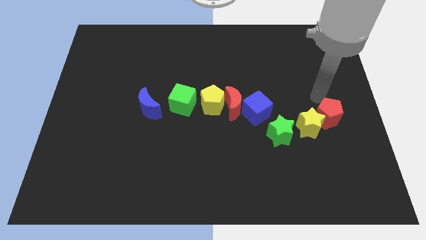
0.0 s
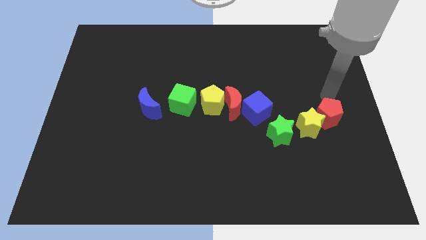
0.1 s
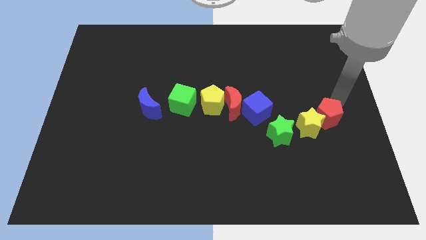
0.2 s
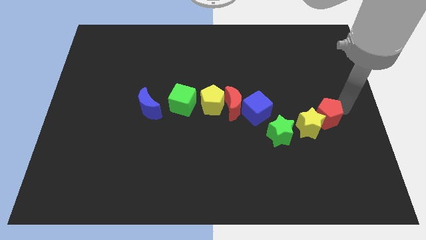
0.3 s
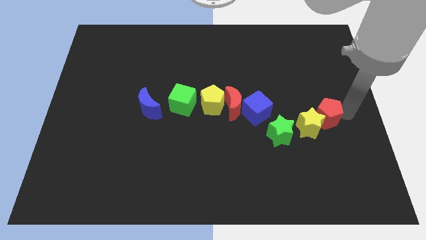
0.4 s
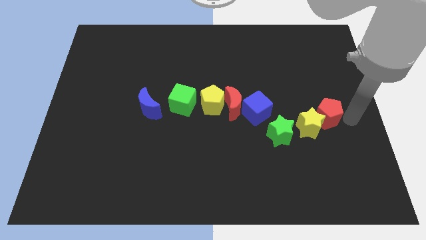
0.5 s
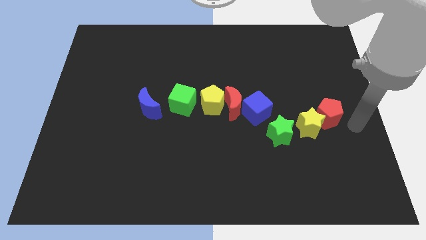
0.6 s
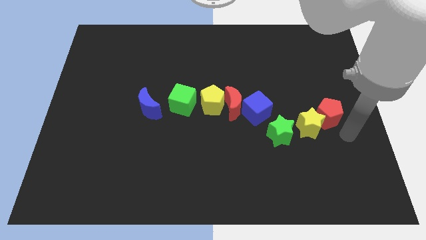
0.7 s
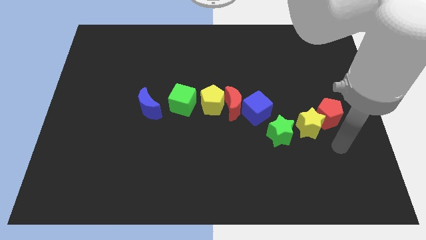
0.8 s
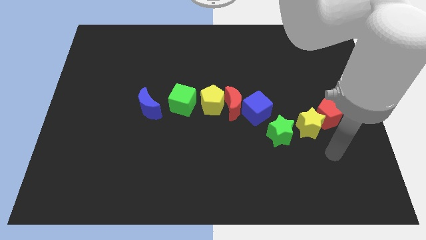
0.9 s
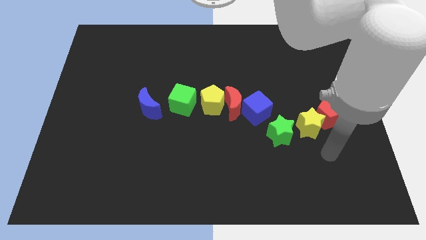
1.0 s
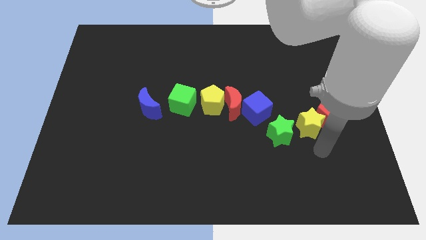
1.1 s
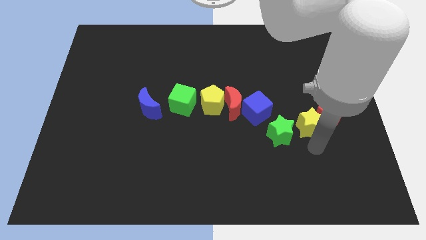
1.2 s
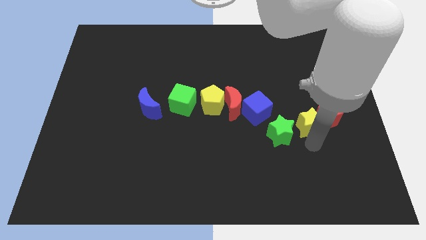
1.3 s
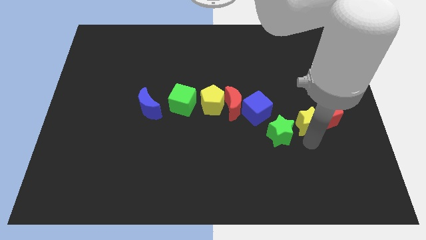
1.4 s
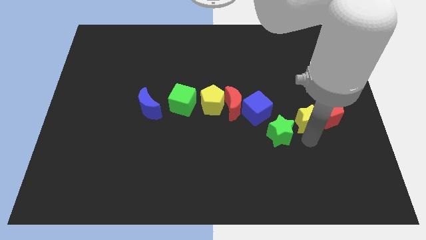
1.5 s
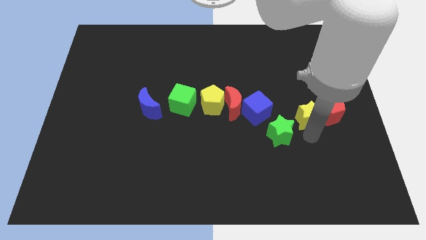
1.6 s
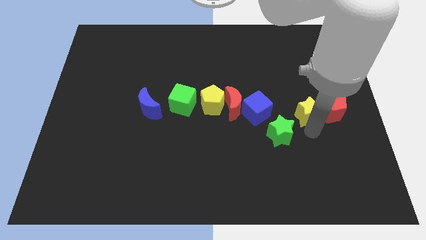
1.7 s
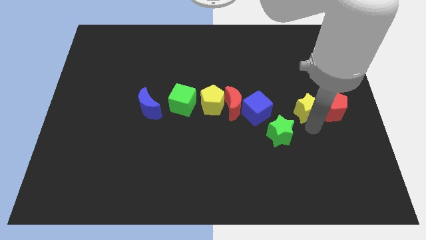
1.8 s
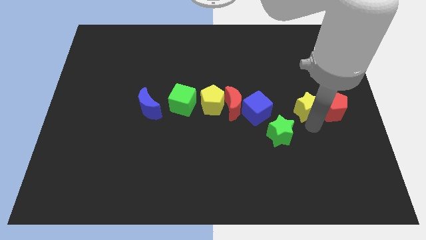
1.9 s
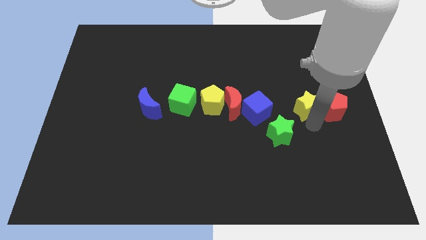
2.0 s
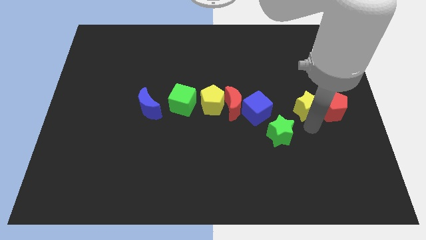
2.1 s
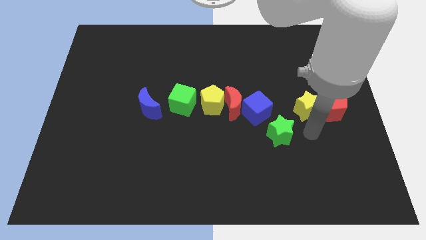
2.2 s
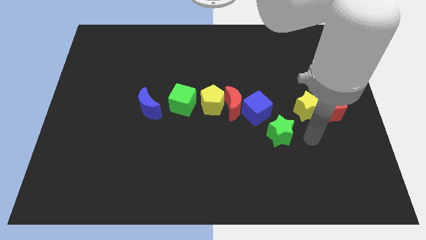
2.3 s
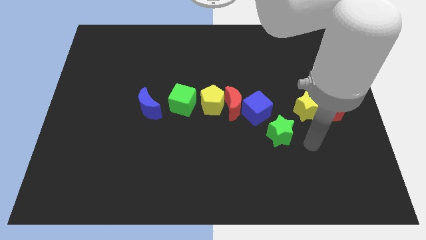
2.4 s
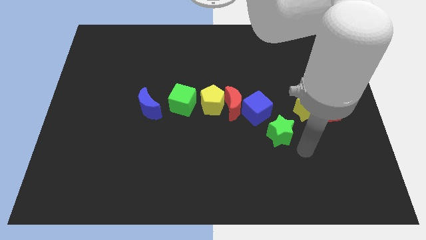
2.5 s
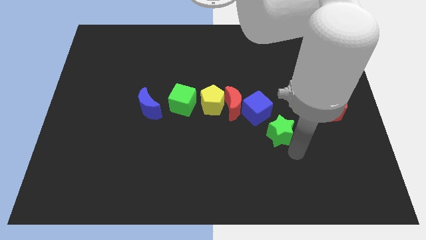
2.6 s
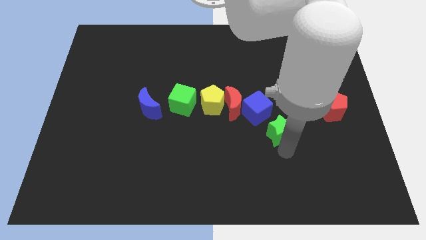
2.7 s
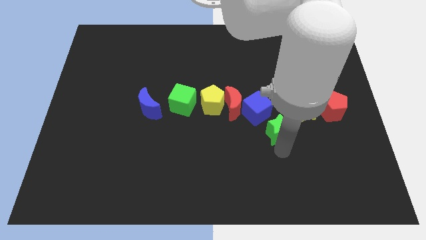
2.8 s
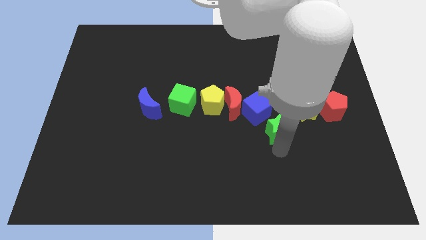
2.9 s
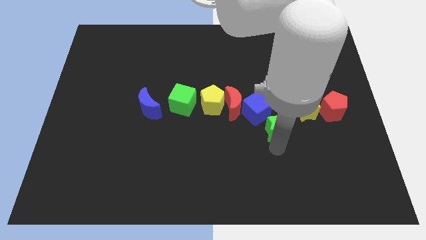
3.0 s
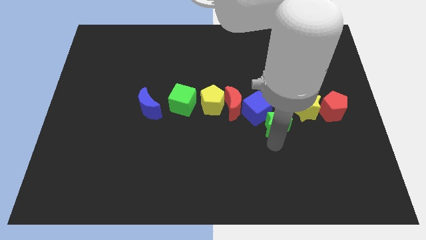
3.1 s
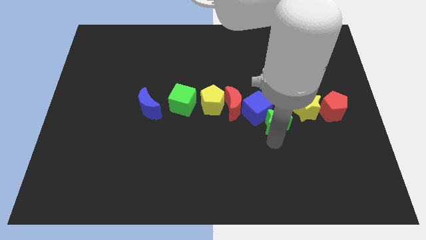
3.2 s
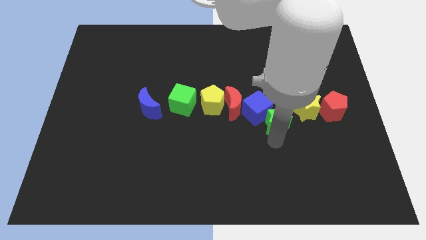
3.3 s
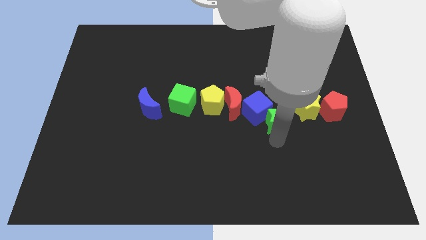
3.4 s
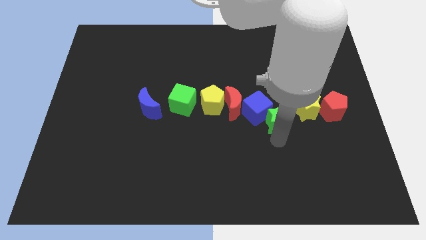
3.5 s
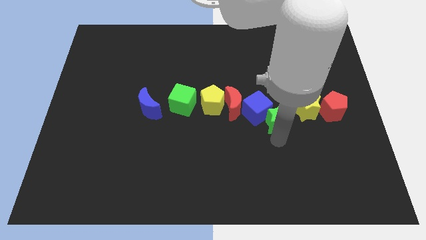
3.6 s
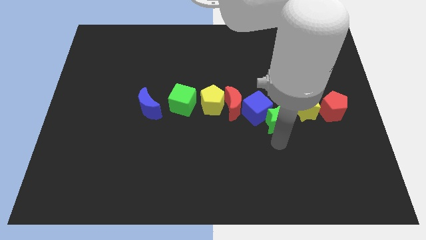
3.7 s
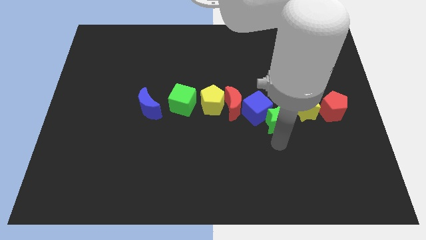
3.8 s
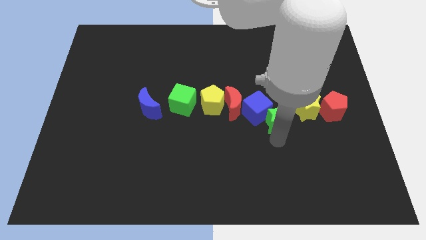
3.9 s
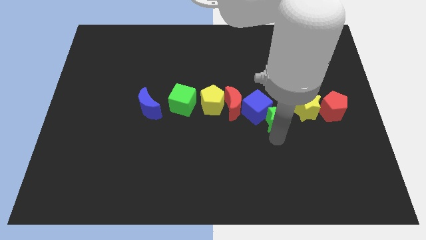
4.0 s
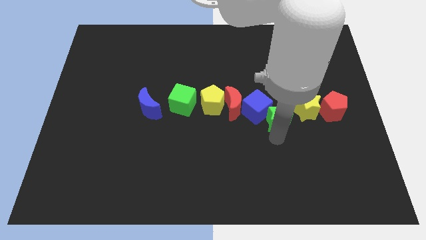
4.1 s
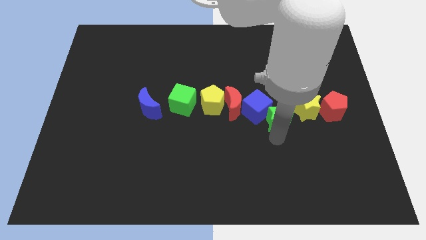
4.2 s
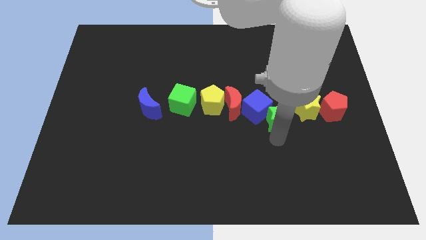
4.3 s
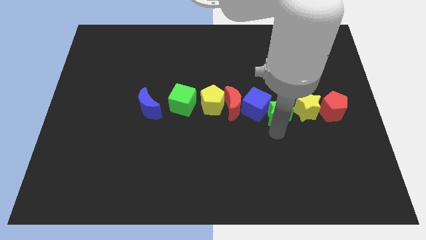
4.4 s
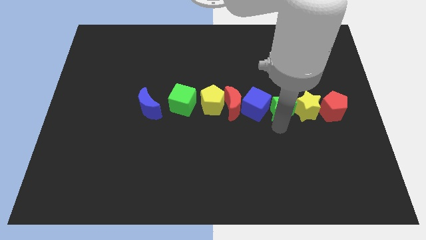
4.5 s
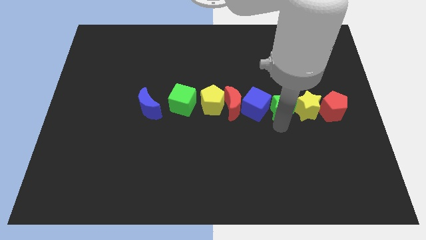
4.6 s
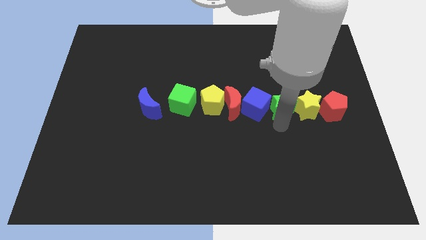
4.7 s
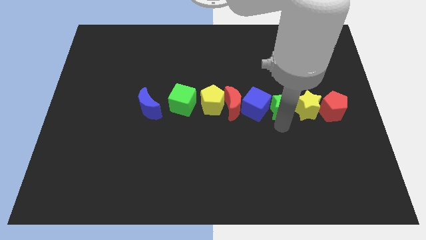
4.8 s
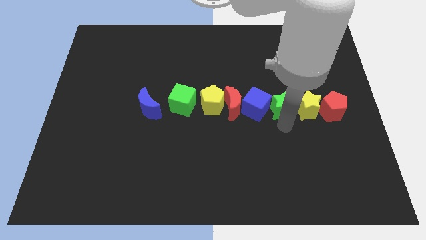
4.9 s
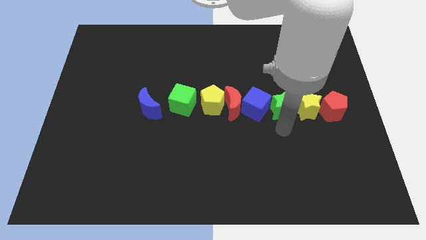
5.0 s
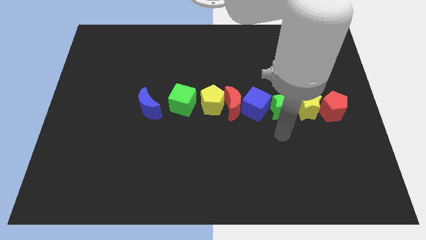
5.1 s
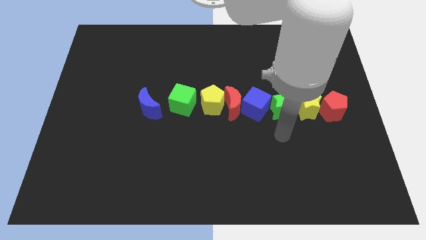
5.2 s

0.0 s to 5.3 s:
move the green star between the yellow star and blue cube

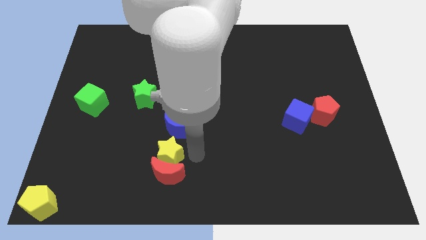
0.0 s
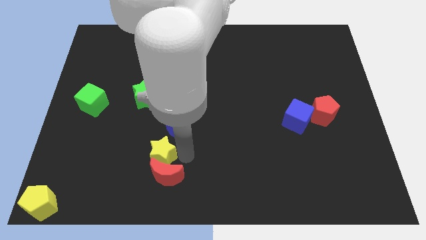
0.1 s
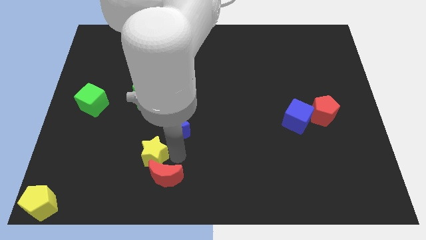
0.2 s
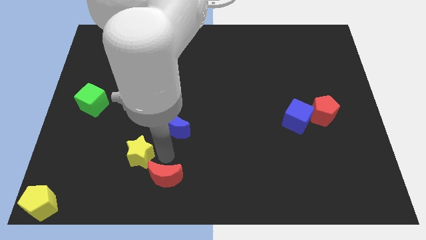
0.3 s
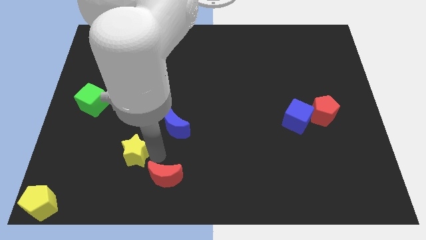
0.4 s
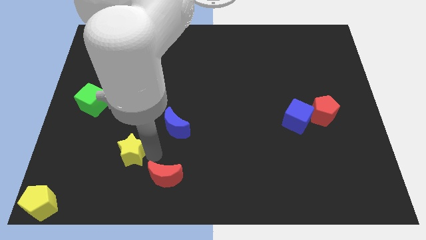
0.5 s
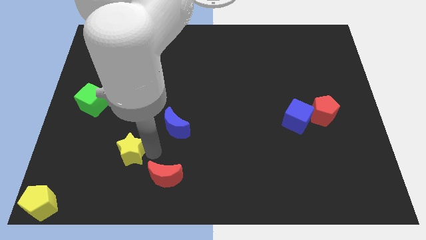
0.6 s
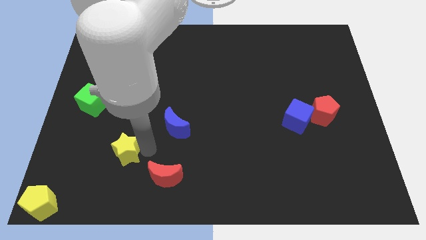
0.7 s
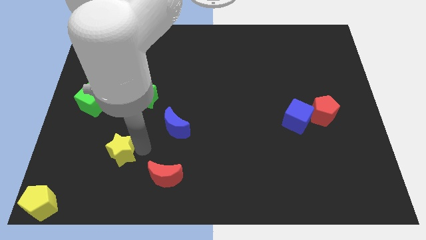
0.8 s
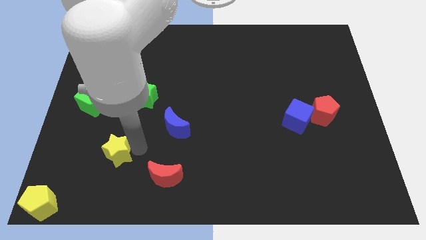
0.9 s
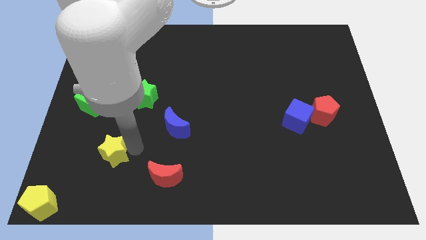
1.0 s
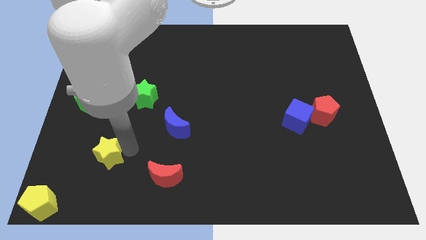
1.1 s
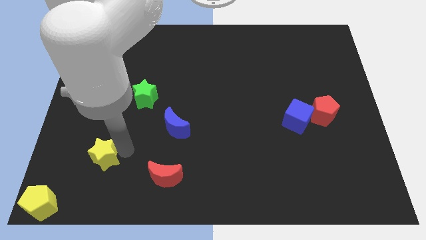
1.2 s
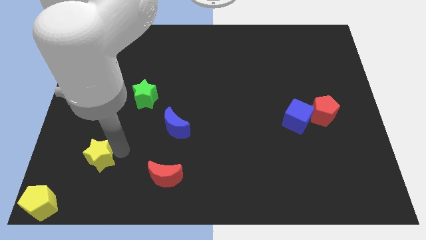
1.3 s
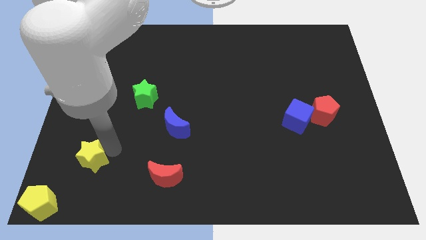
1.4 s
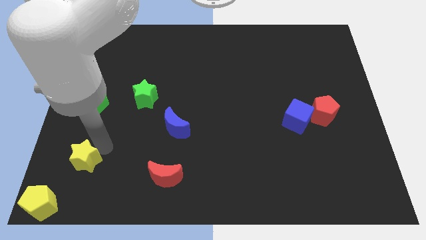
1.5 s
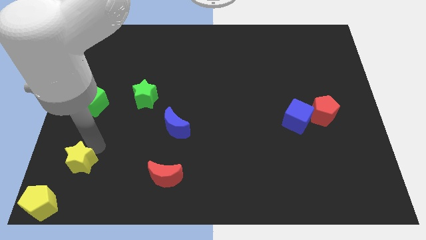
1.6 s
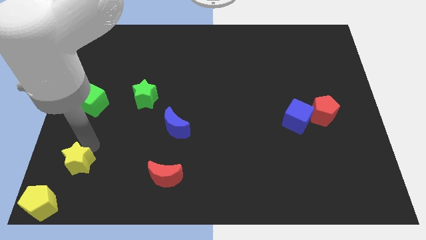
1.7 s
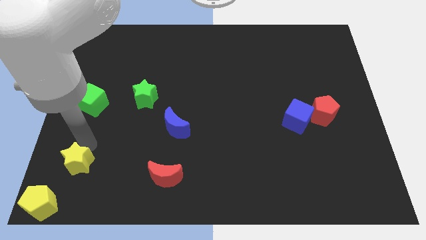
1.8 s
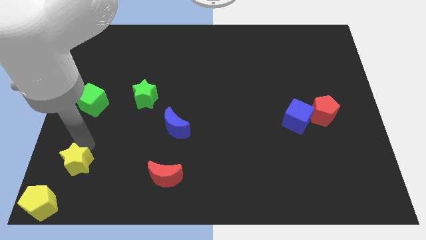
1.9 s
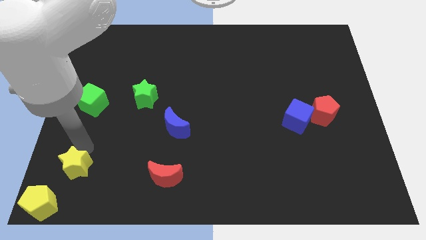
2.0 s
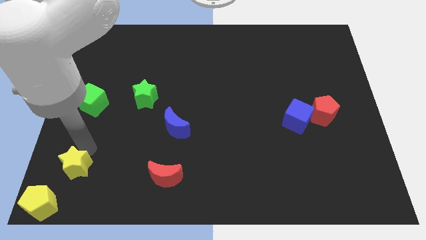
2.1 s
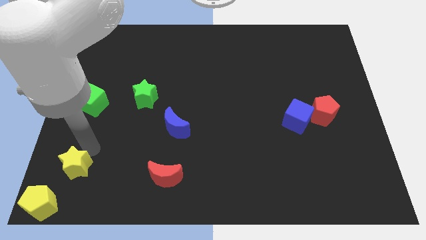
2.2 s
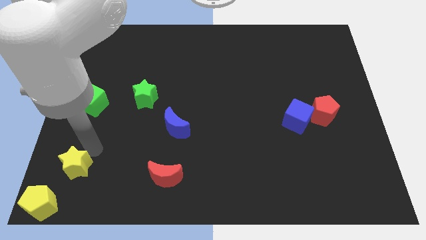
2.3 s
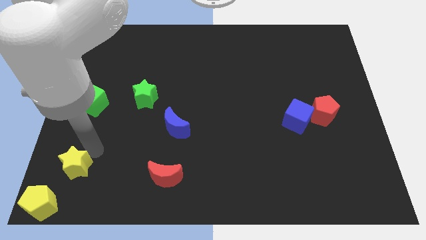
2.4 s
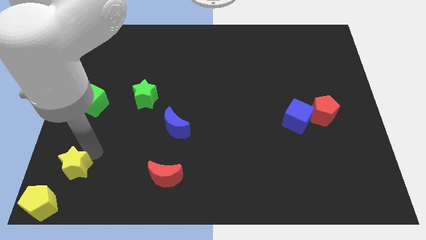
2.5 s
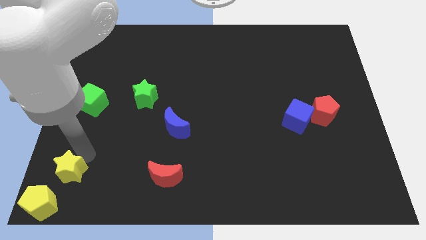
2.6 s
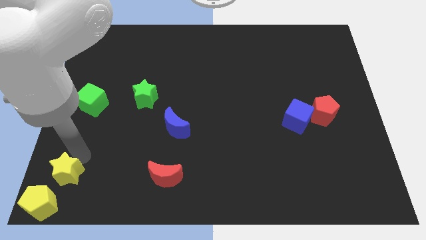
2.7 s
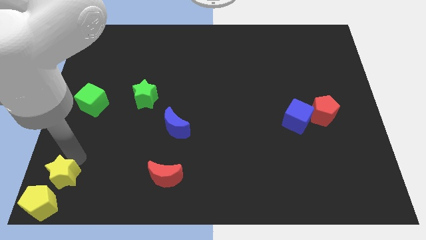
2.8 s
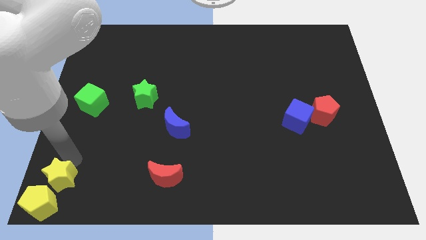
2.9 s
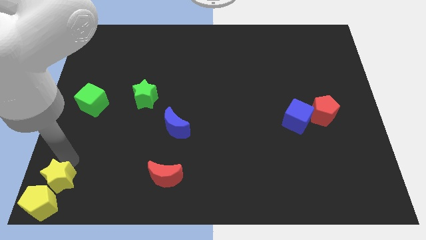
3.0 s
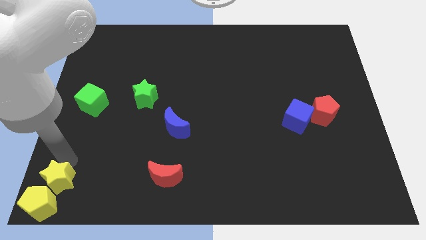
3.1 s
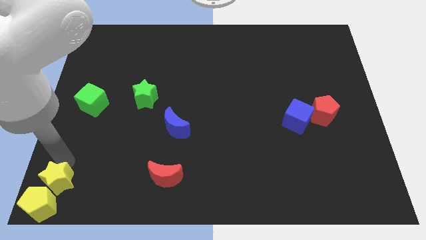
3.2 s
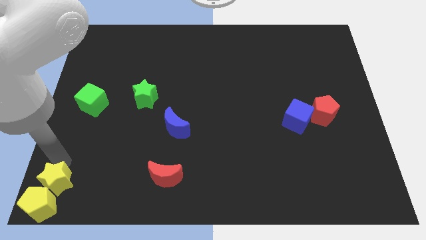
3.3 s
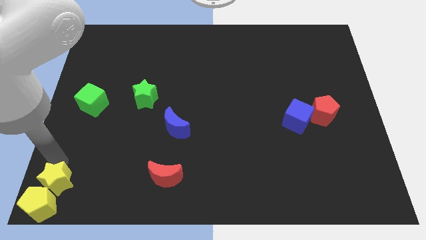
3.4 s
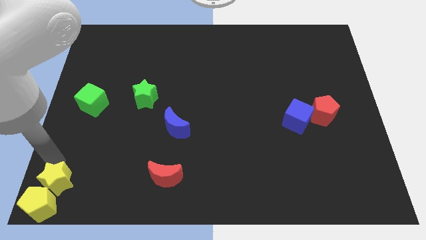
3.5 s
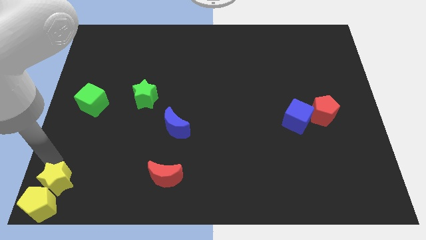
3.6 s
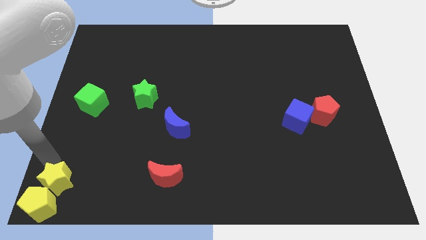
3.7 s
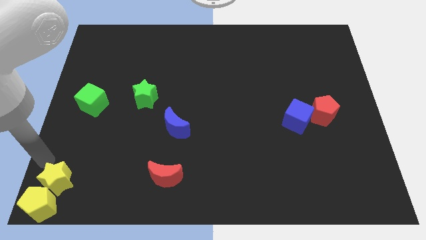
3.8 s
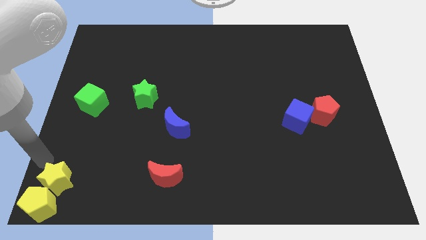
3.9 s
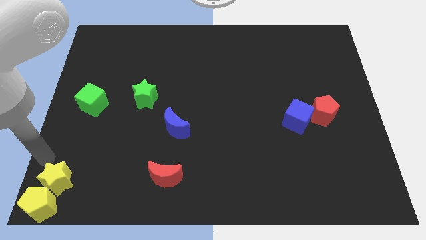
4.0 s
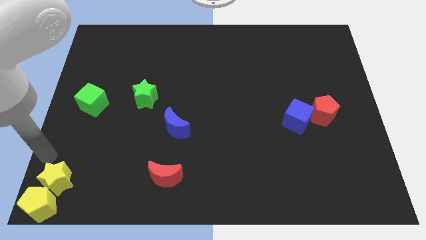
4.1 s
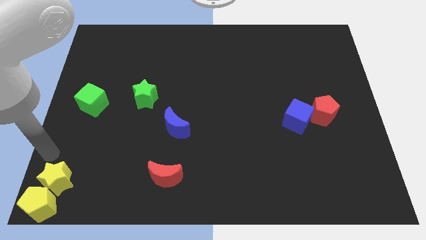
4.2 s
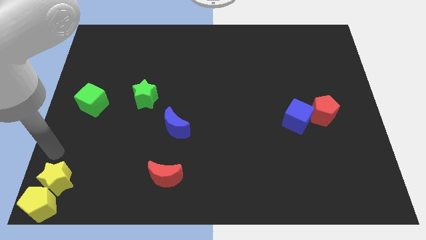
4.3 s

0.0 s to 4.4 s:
move the yellow star into the yellow pentagon
